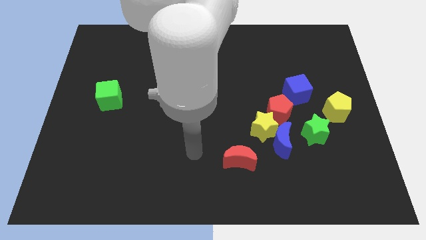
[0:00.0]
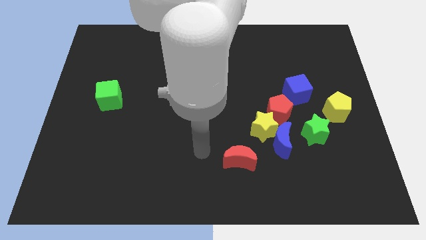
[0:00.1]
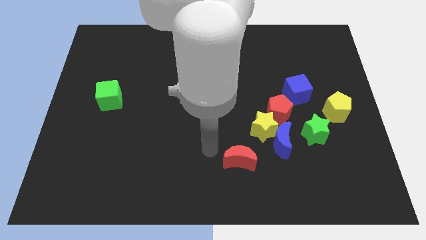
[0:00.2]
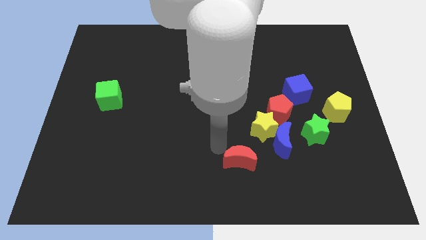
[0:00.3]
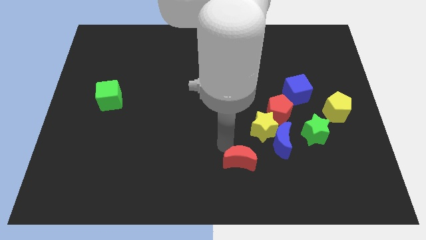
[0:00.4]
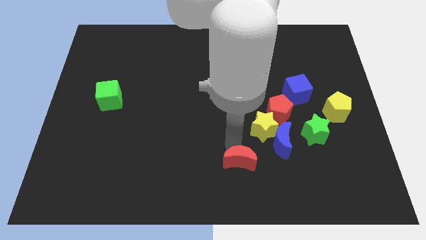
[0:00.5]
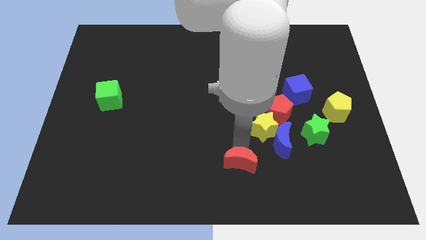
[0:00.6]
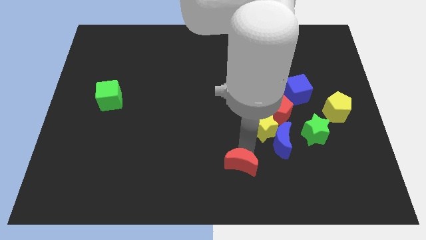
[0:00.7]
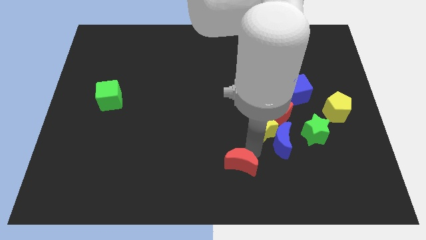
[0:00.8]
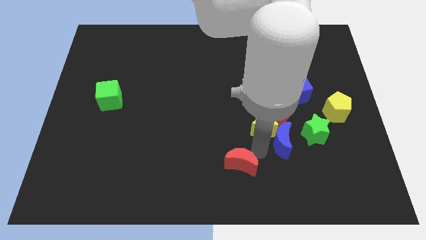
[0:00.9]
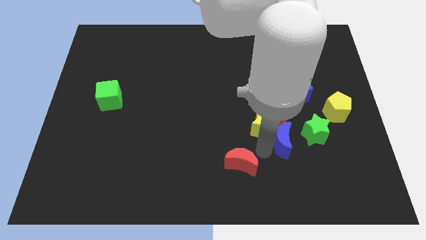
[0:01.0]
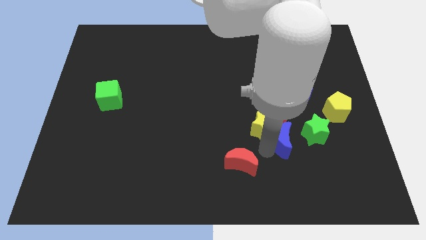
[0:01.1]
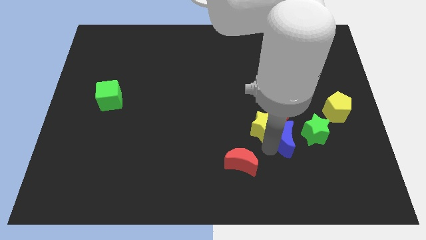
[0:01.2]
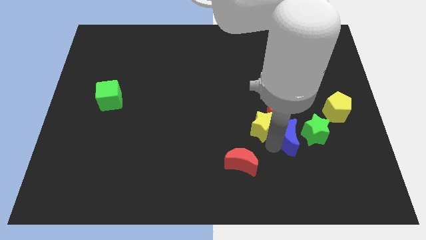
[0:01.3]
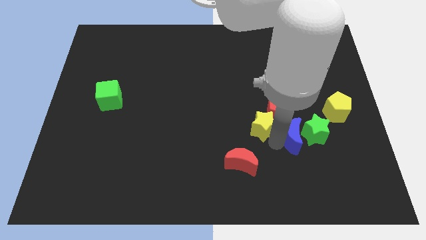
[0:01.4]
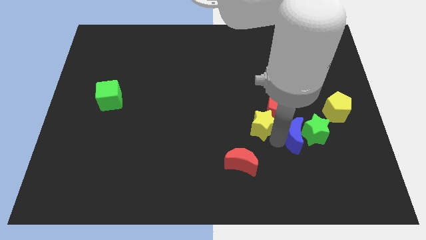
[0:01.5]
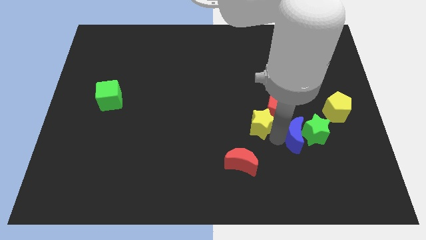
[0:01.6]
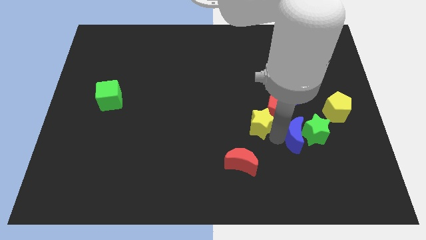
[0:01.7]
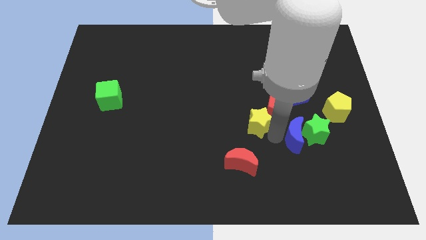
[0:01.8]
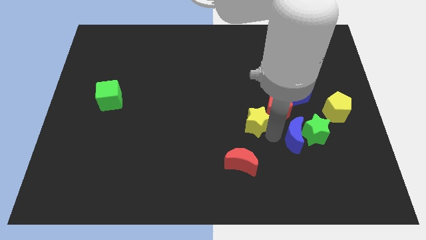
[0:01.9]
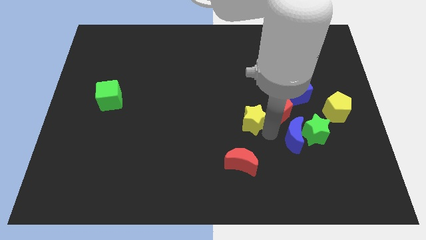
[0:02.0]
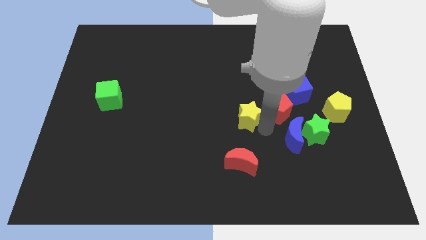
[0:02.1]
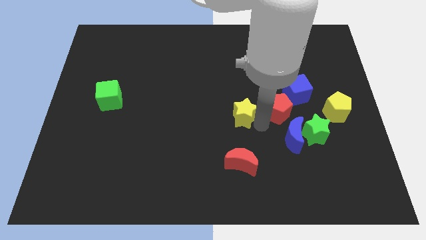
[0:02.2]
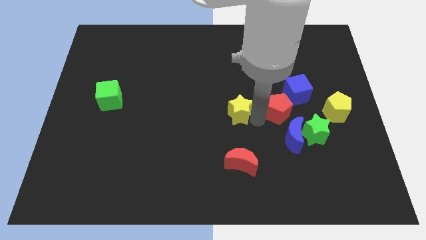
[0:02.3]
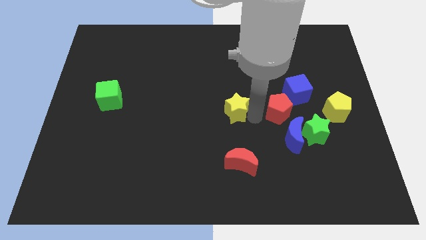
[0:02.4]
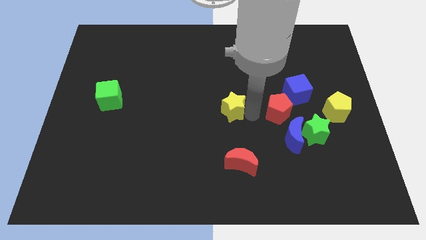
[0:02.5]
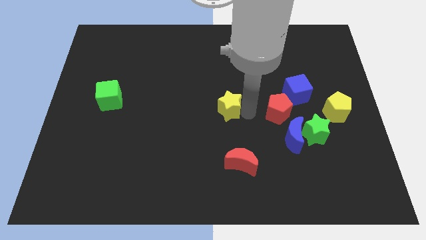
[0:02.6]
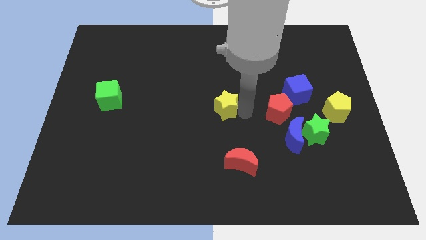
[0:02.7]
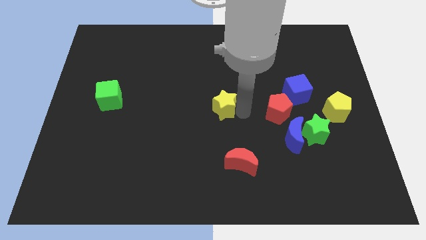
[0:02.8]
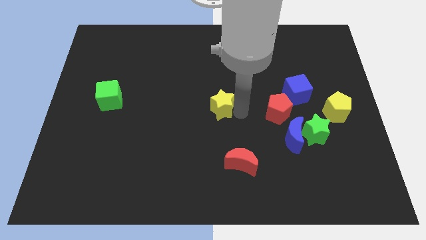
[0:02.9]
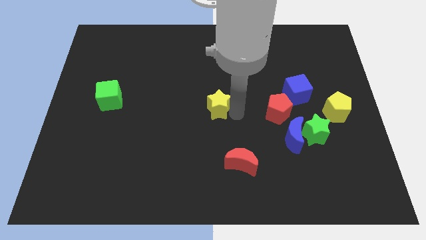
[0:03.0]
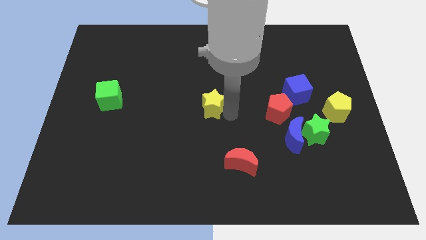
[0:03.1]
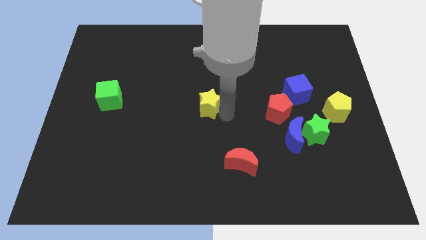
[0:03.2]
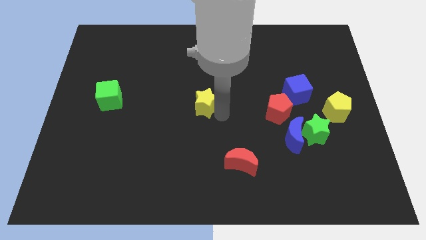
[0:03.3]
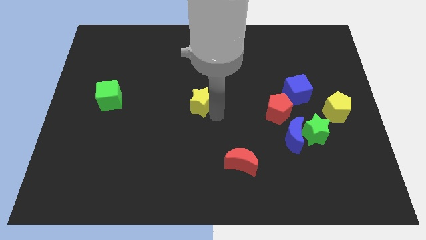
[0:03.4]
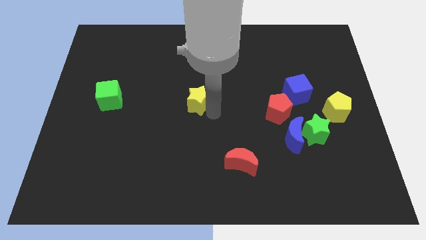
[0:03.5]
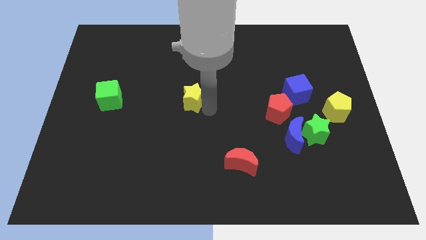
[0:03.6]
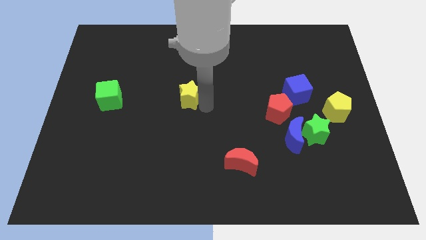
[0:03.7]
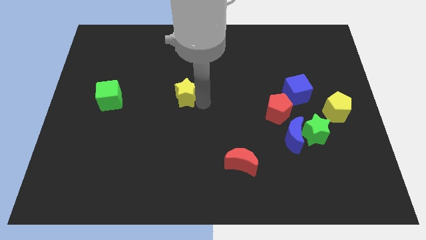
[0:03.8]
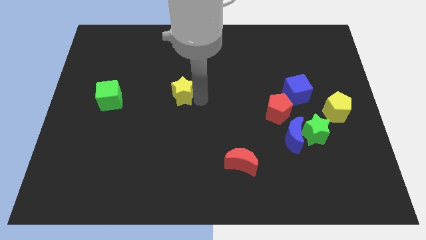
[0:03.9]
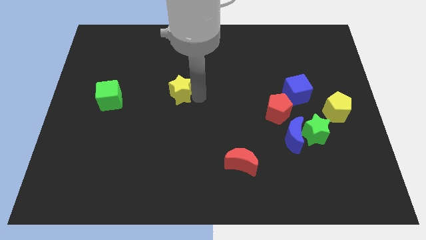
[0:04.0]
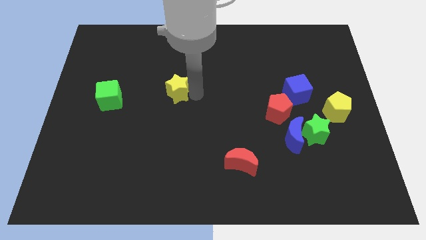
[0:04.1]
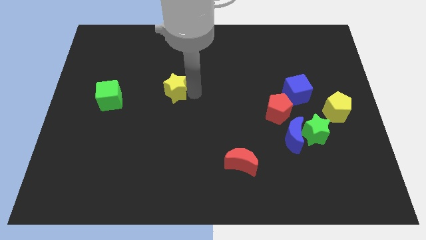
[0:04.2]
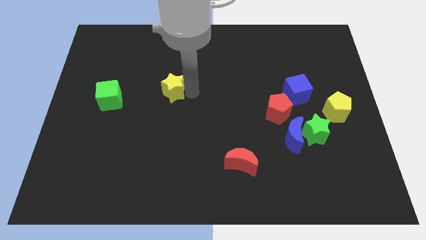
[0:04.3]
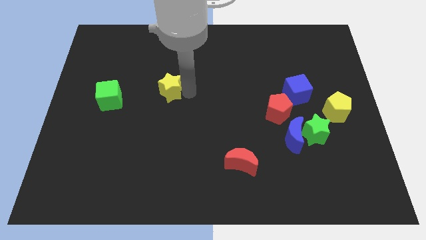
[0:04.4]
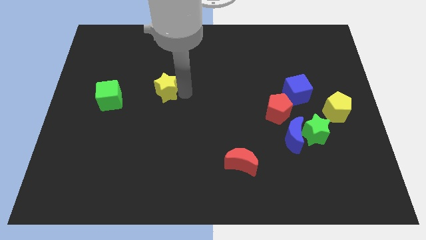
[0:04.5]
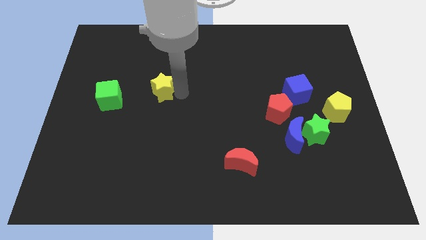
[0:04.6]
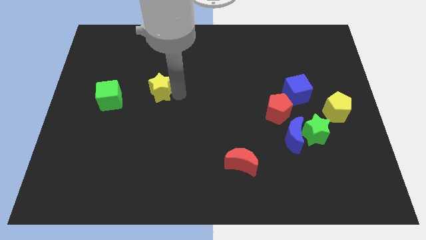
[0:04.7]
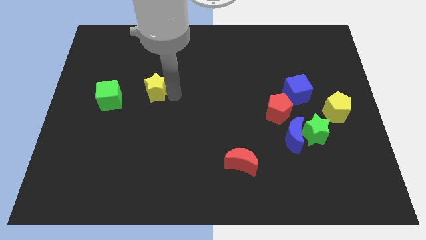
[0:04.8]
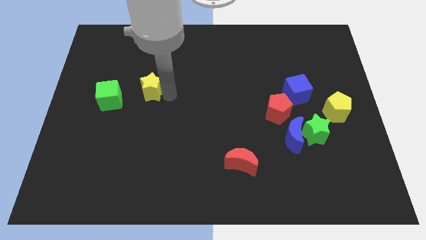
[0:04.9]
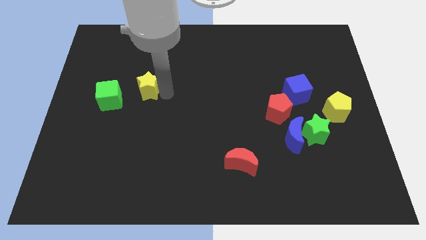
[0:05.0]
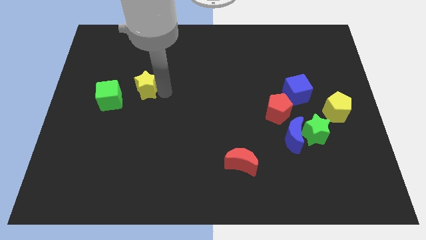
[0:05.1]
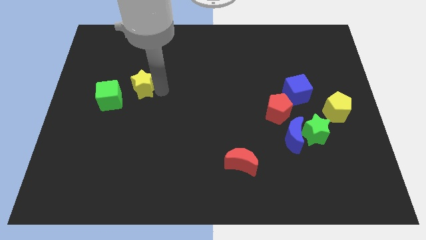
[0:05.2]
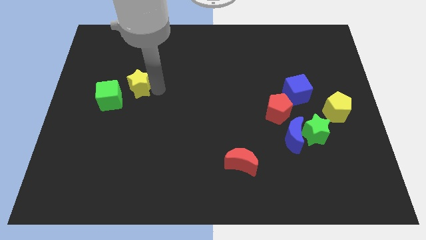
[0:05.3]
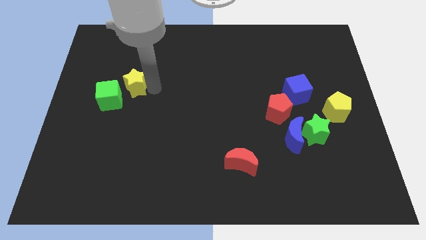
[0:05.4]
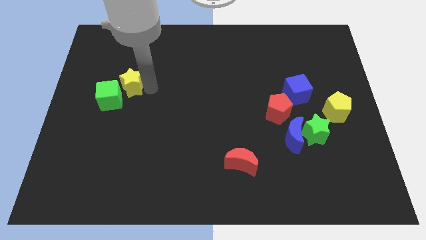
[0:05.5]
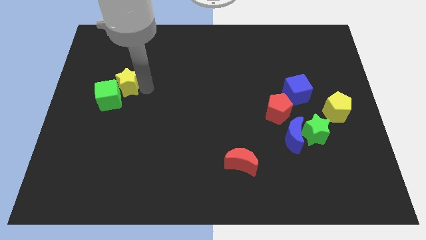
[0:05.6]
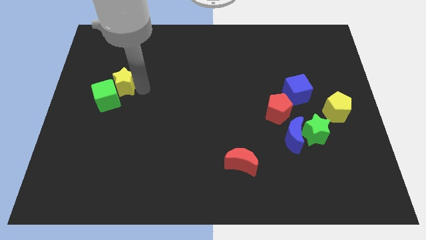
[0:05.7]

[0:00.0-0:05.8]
put the yellow star close to the green cube

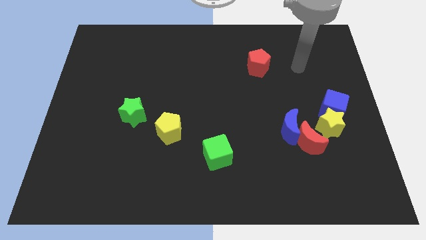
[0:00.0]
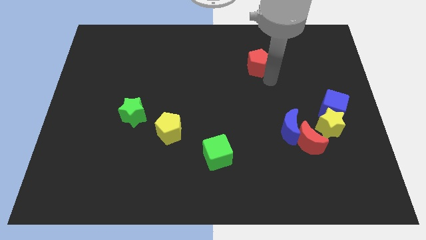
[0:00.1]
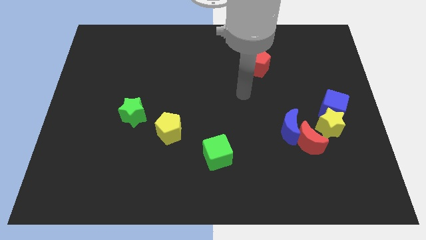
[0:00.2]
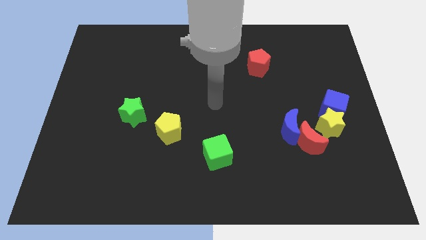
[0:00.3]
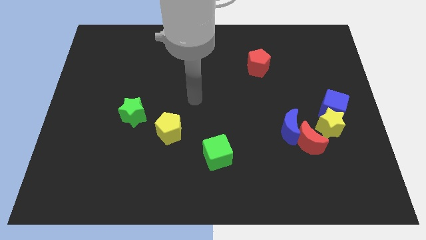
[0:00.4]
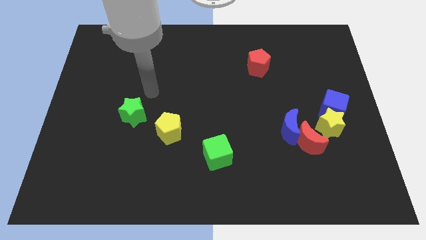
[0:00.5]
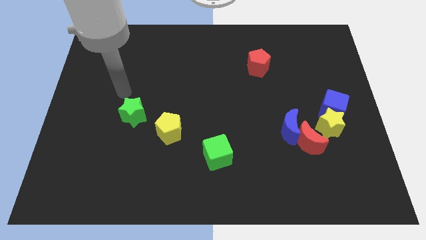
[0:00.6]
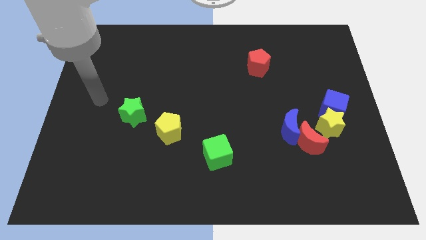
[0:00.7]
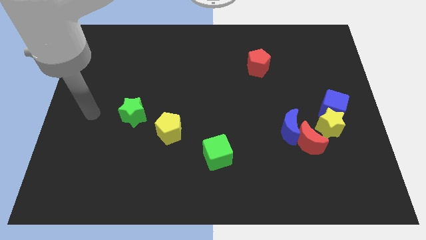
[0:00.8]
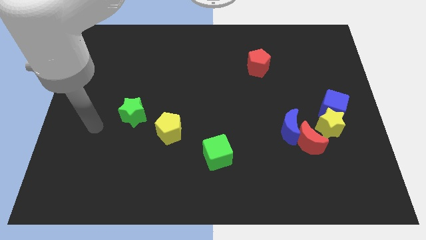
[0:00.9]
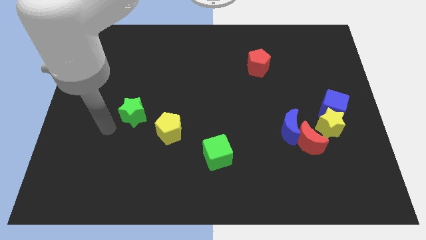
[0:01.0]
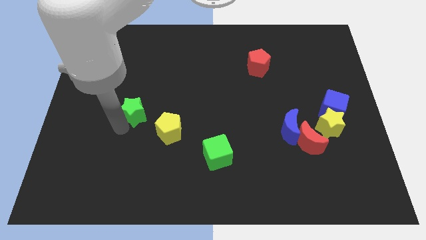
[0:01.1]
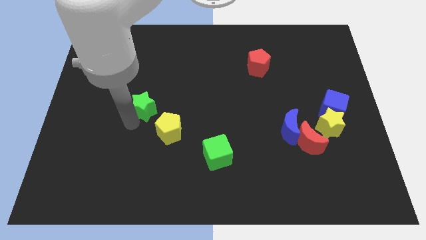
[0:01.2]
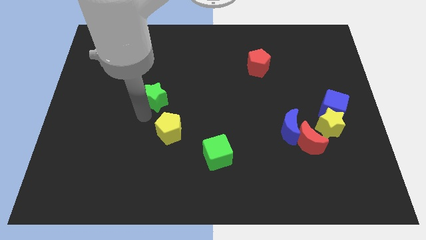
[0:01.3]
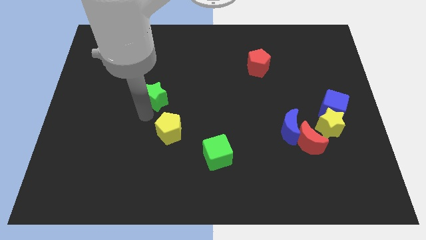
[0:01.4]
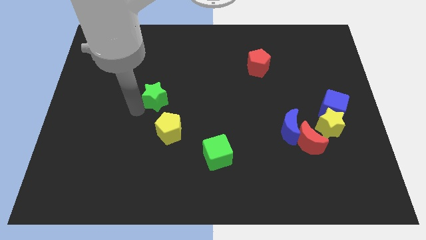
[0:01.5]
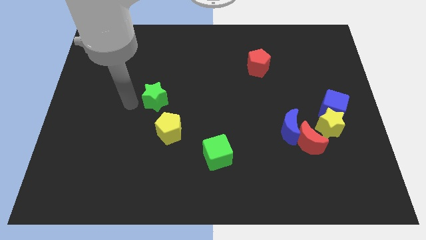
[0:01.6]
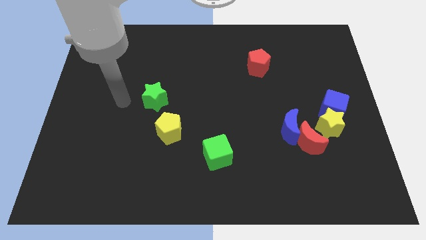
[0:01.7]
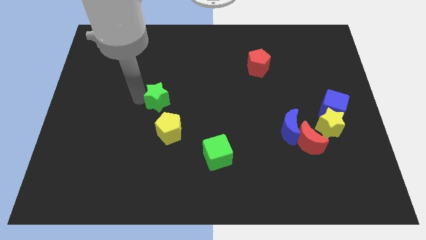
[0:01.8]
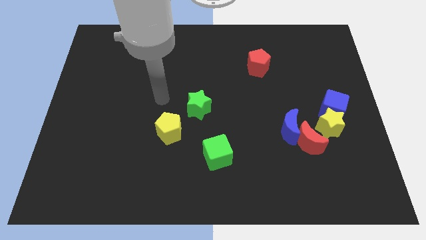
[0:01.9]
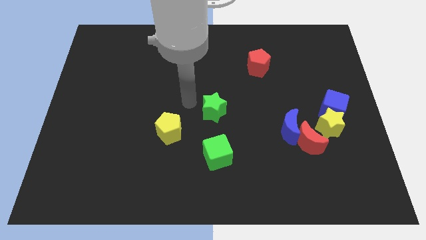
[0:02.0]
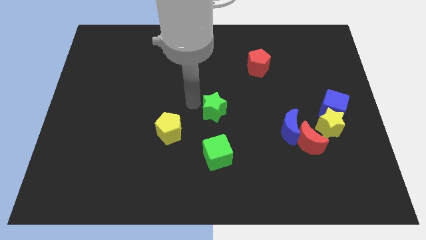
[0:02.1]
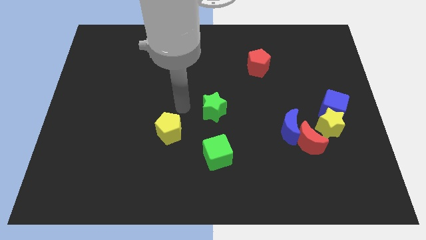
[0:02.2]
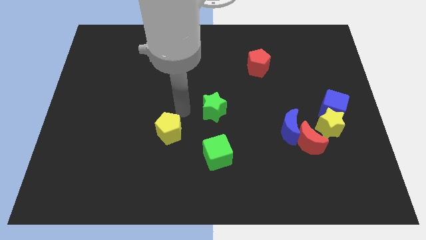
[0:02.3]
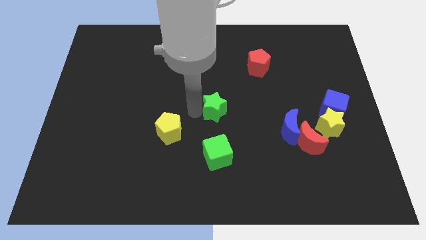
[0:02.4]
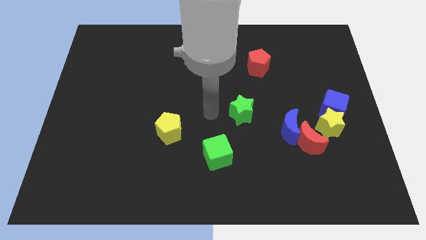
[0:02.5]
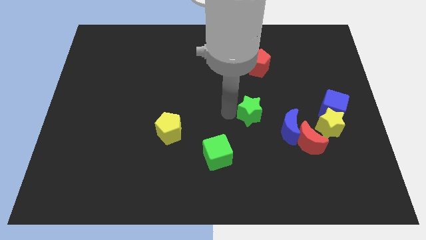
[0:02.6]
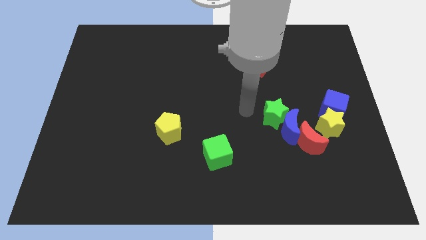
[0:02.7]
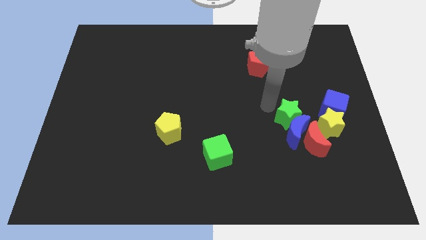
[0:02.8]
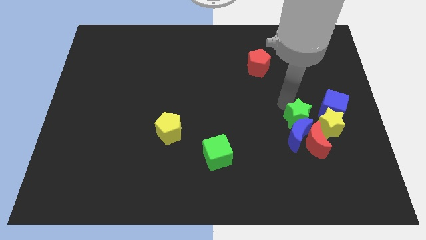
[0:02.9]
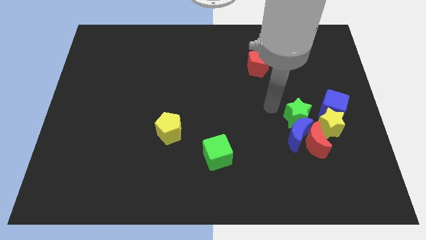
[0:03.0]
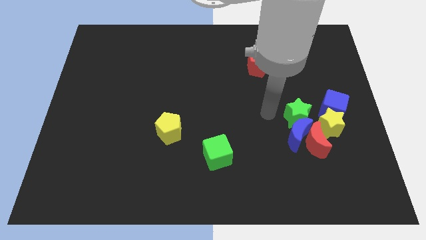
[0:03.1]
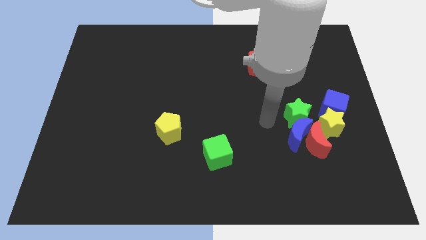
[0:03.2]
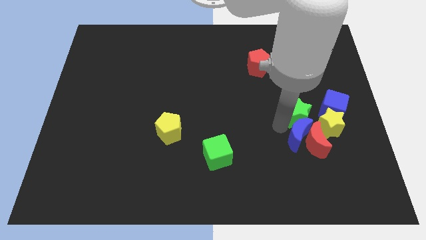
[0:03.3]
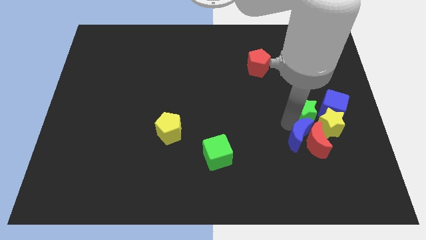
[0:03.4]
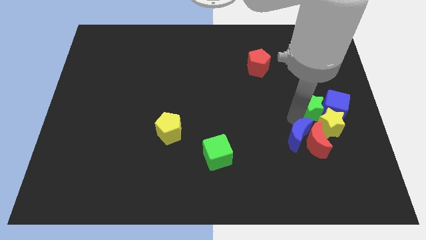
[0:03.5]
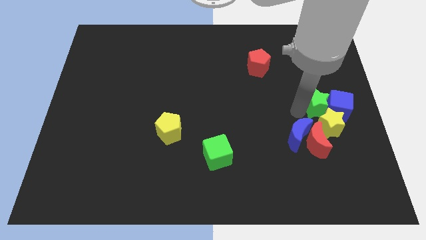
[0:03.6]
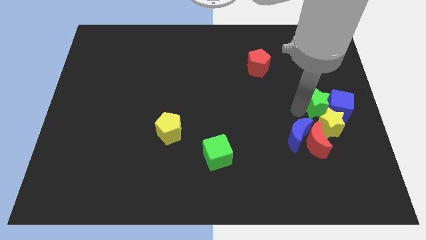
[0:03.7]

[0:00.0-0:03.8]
put the green star next to the blue cube
